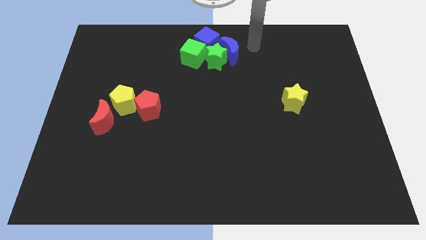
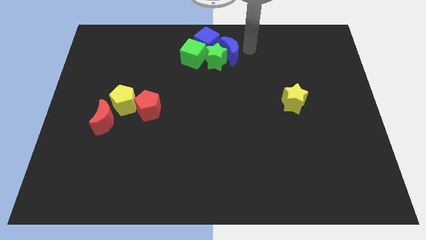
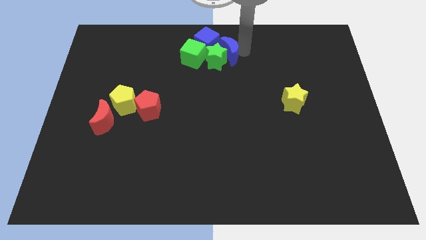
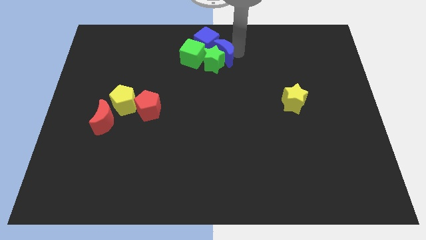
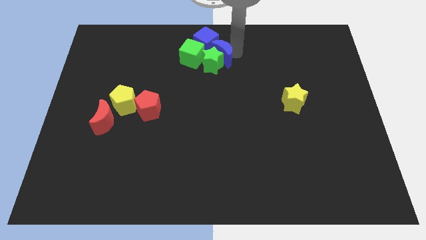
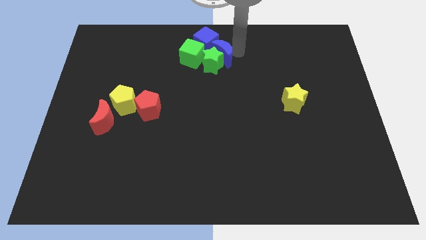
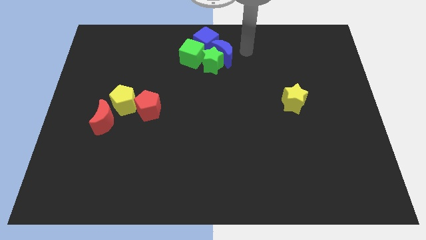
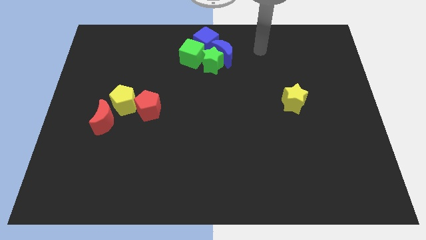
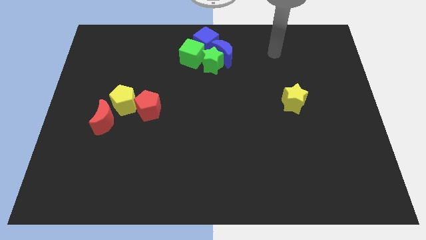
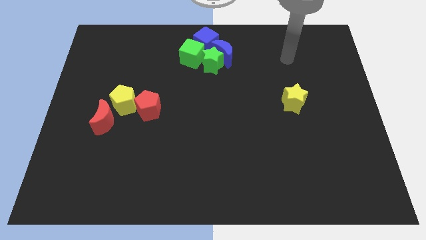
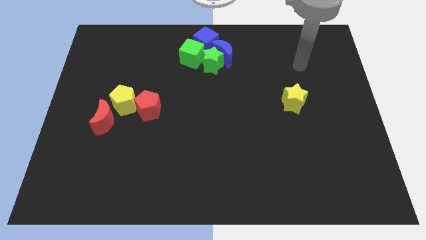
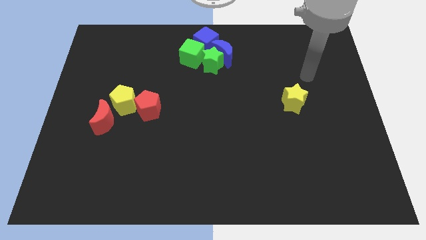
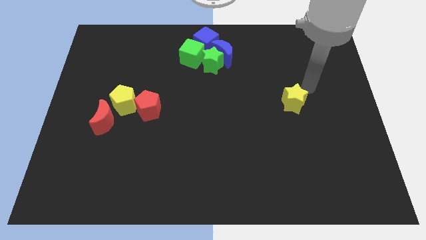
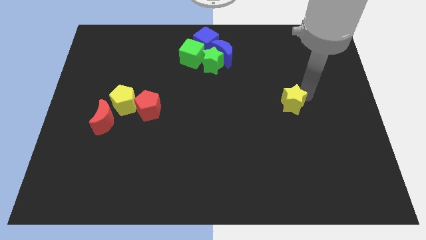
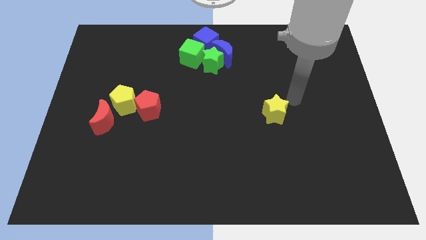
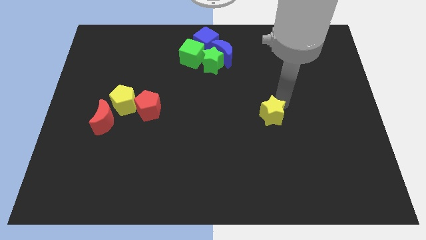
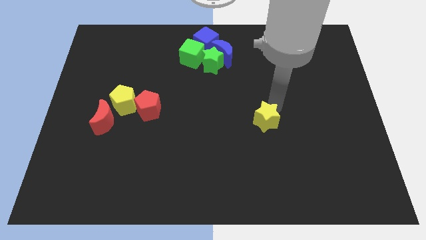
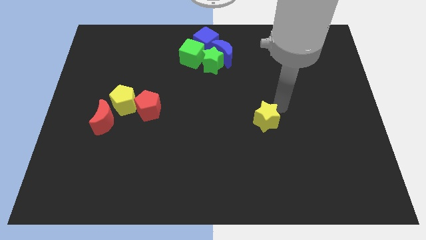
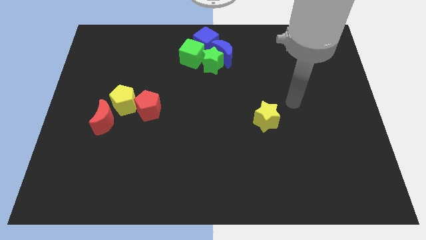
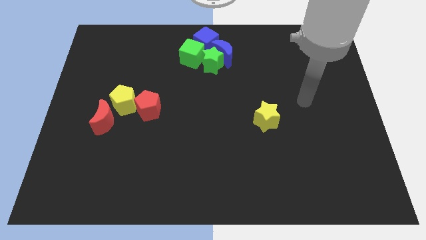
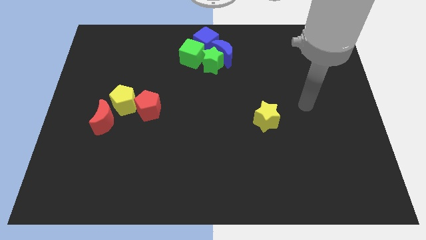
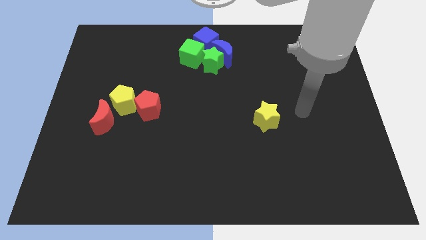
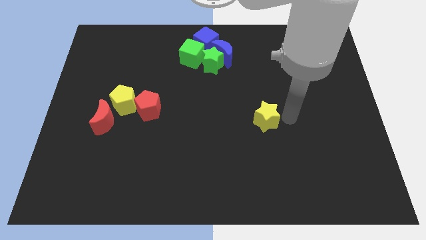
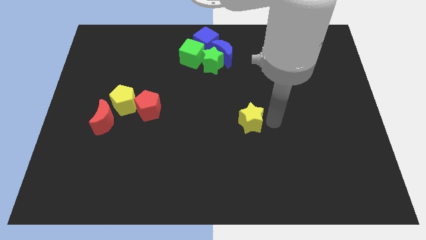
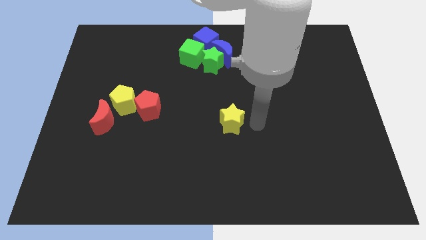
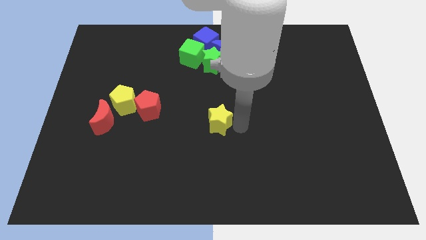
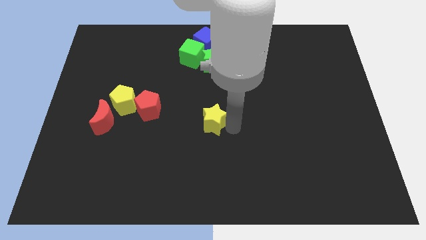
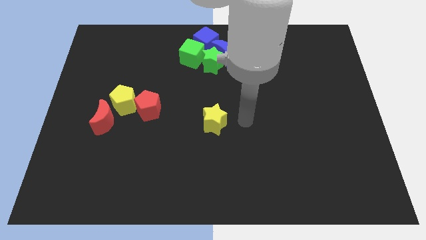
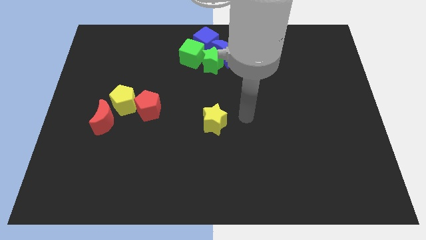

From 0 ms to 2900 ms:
move the yellow star to the bottom of the green star

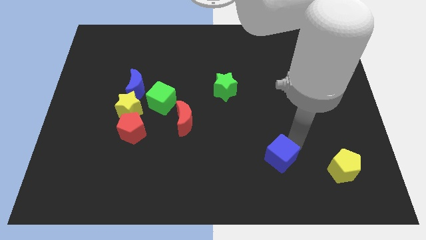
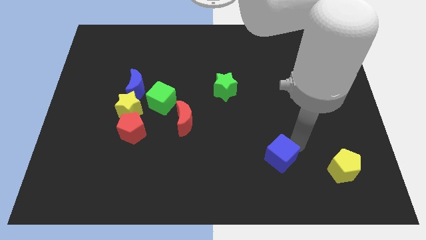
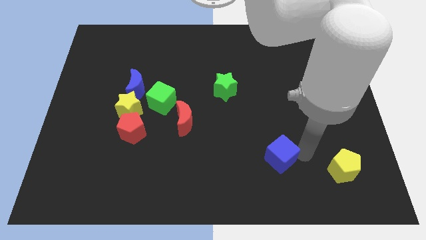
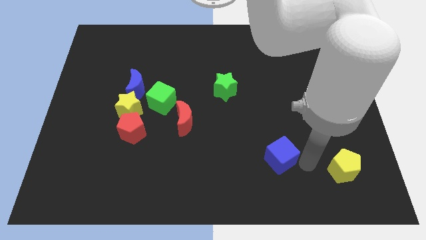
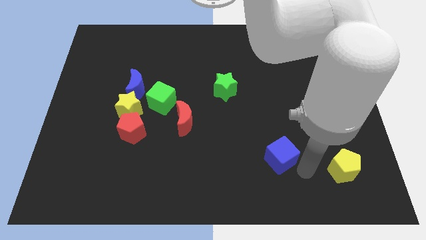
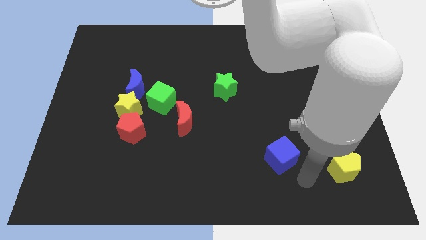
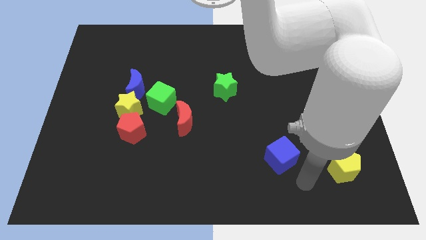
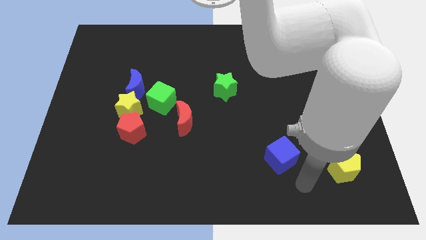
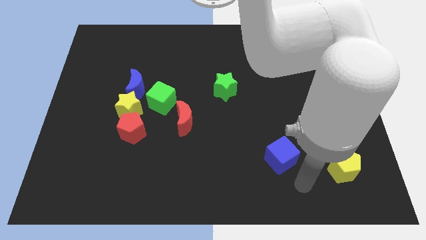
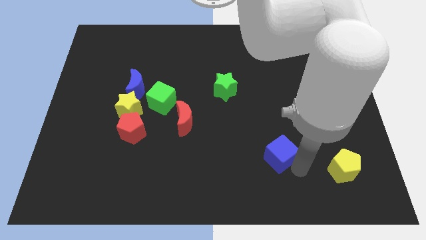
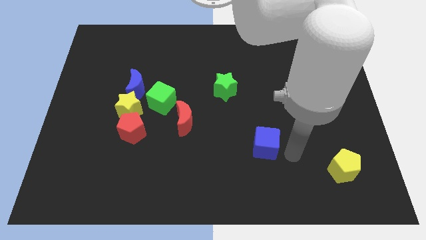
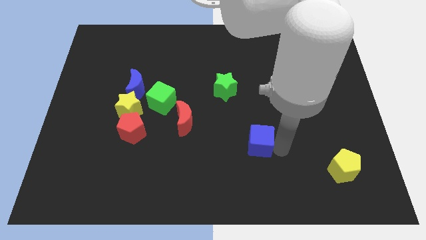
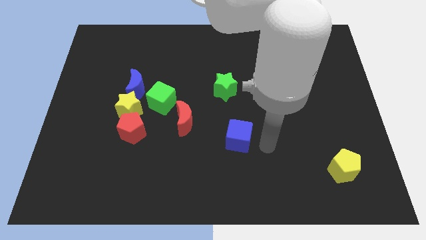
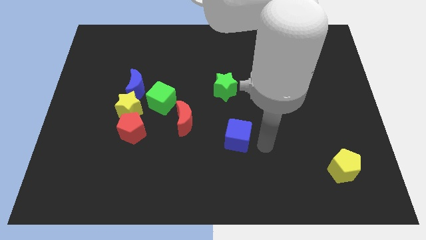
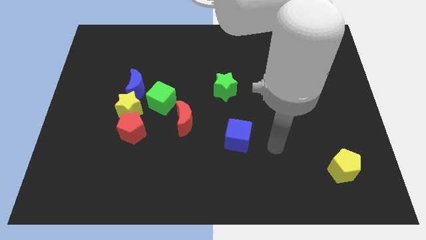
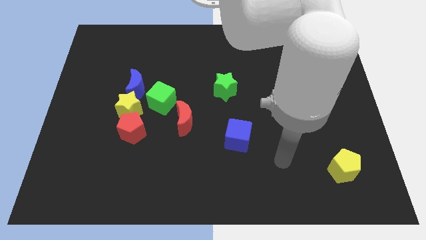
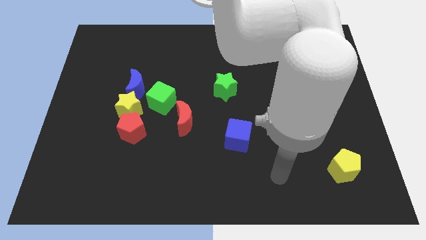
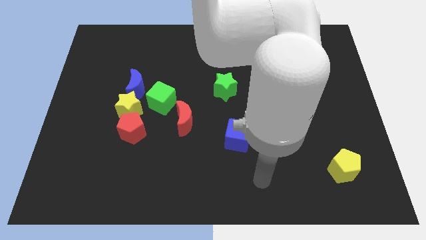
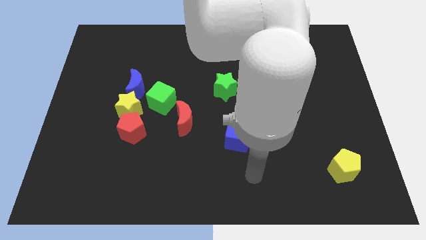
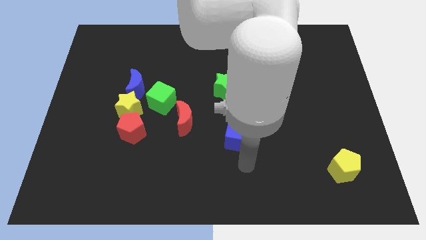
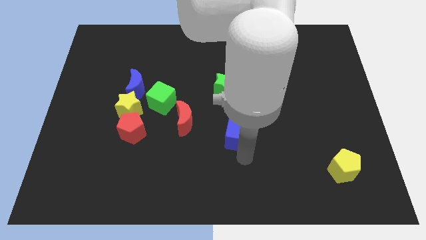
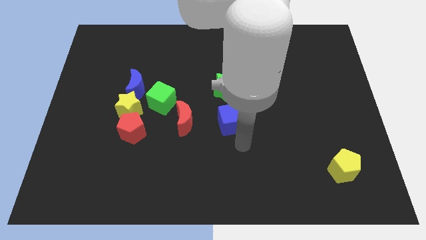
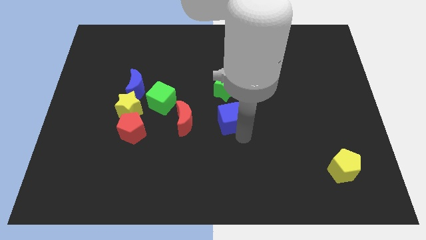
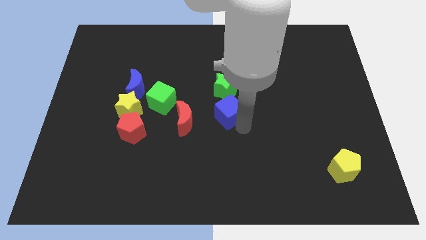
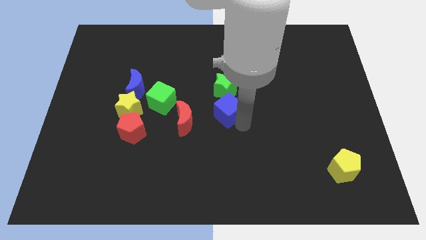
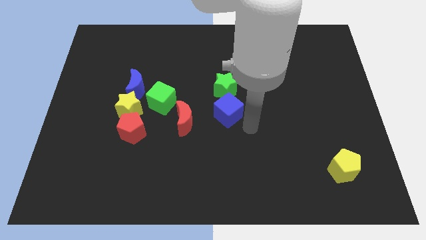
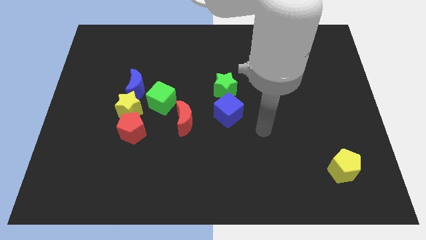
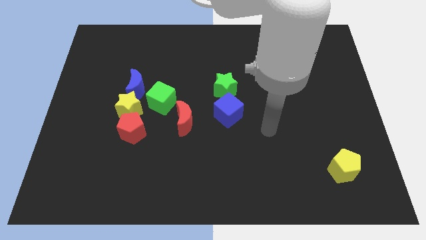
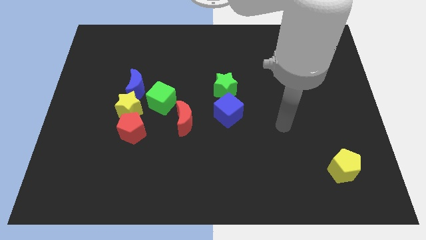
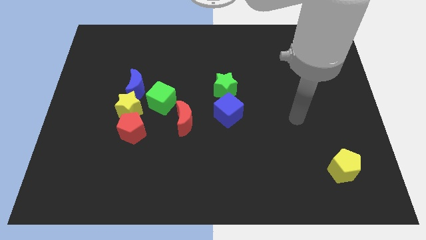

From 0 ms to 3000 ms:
push the blue cube below the green star

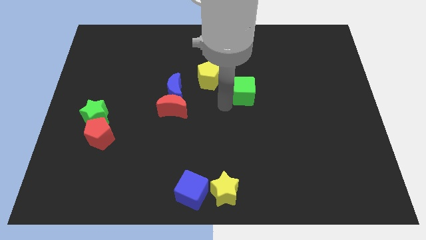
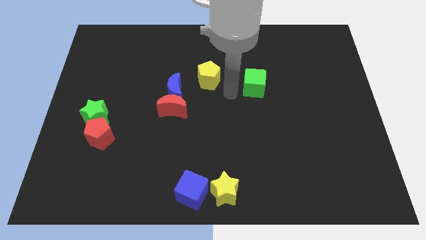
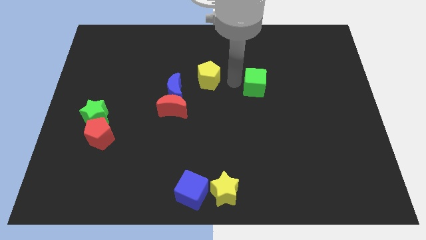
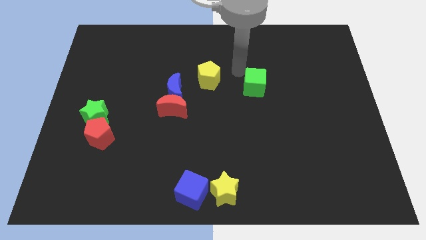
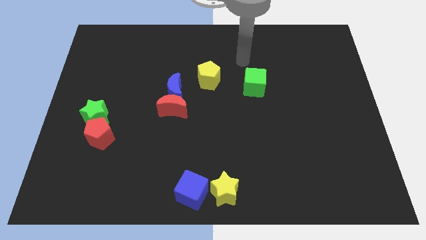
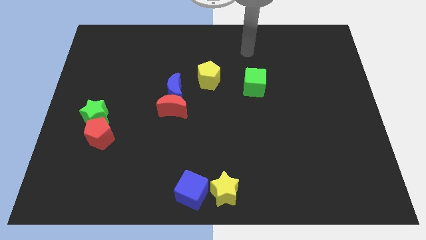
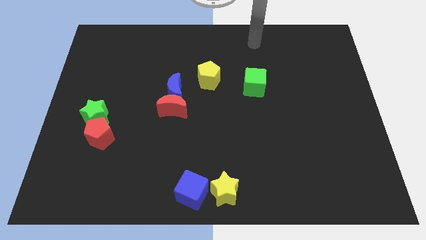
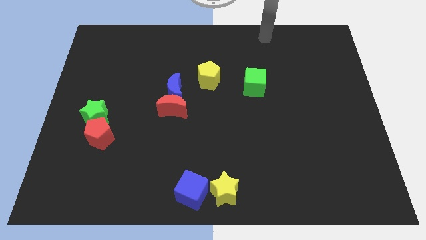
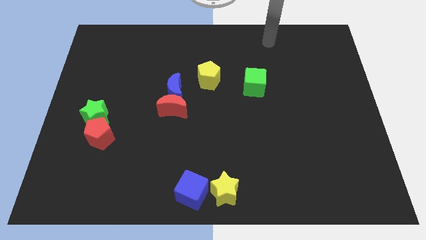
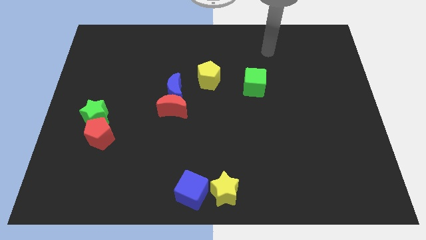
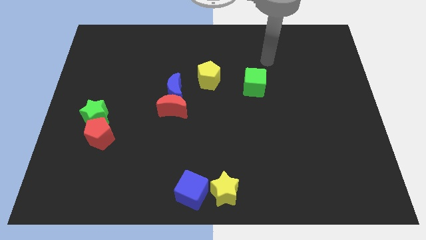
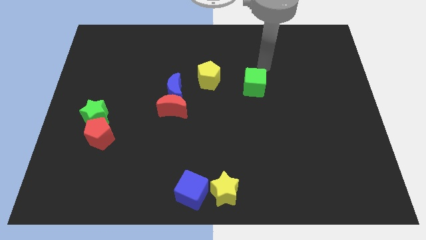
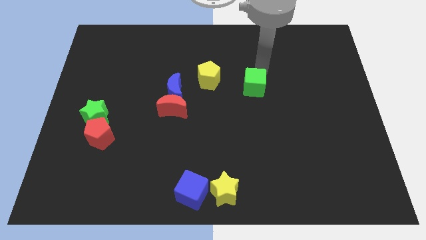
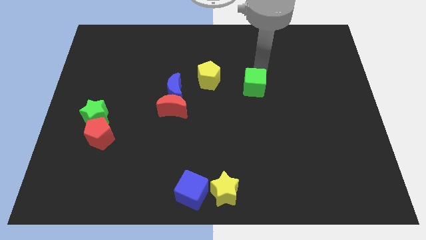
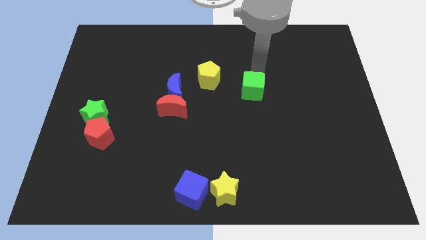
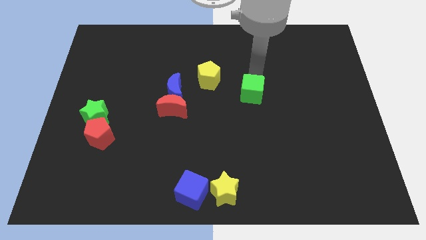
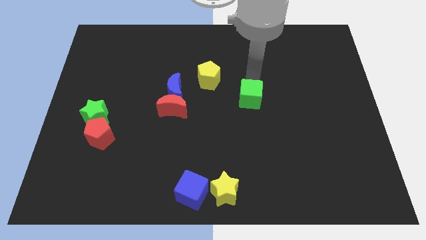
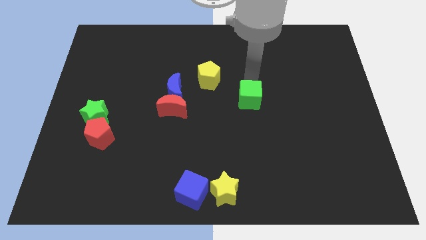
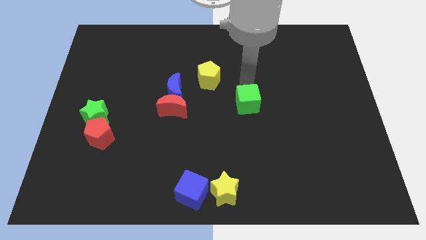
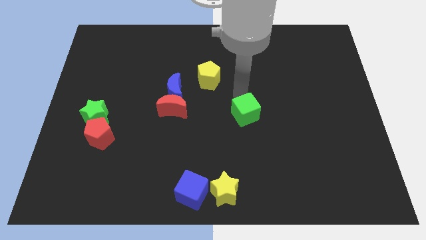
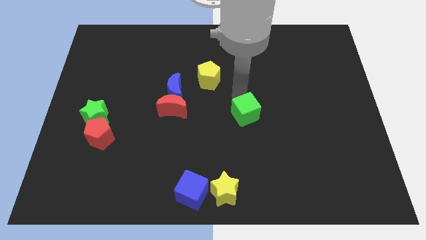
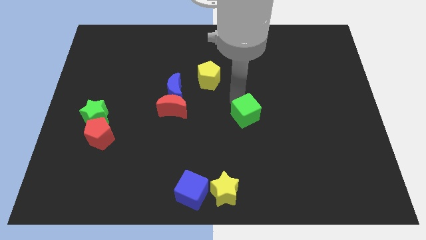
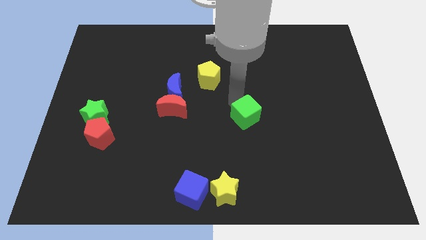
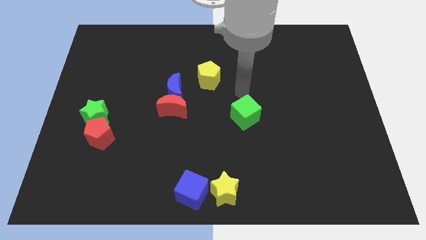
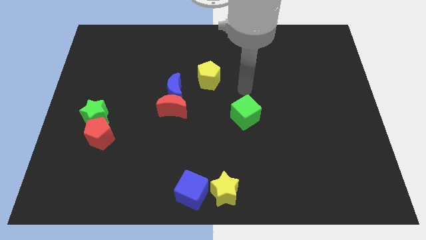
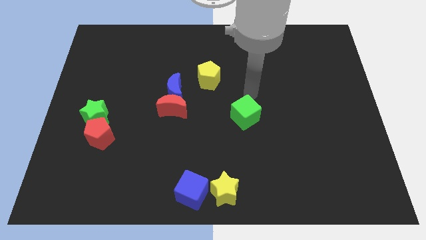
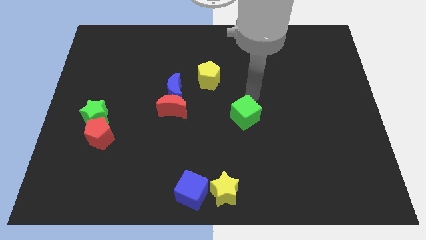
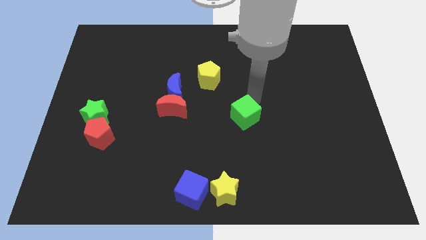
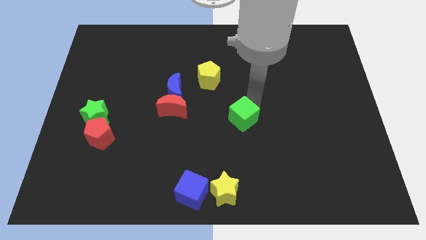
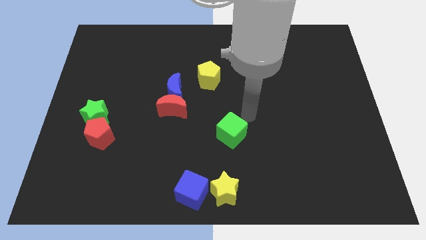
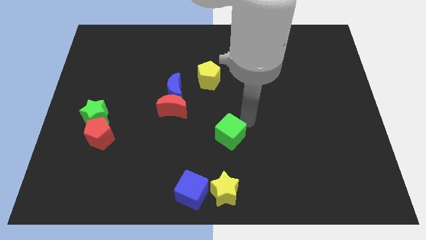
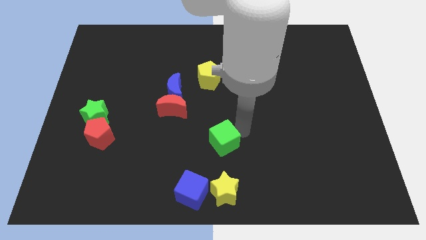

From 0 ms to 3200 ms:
place the green cube at the top side of the yellow star
